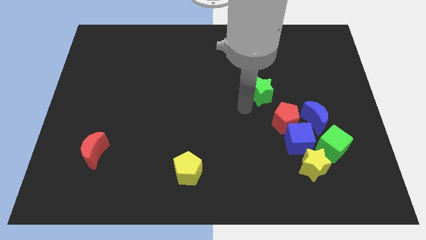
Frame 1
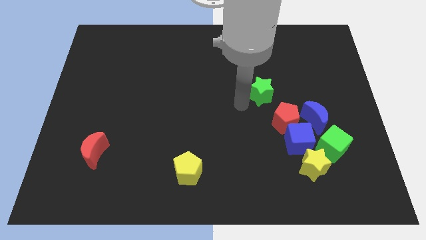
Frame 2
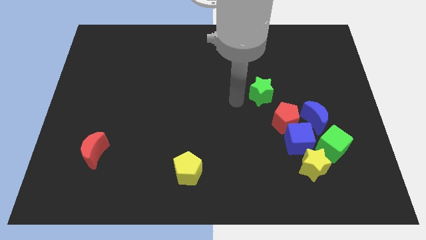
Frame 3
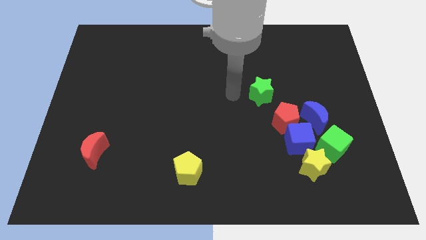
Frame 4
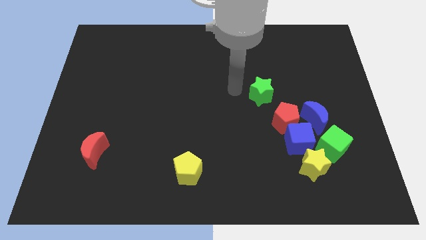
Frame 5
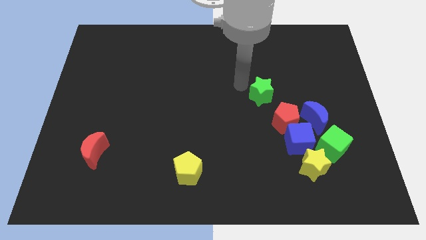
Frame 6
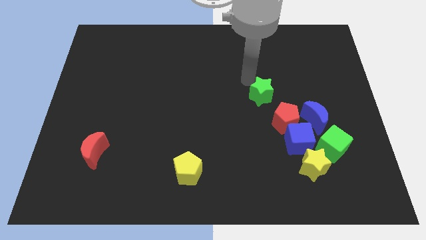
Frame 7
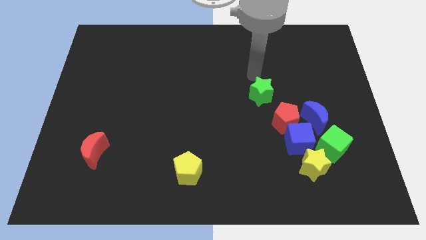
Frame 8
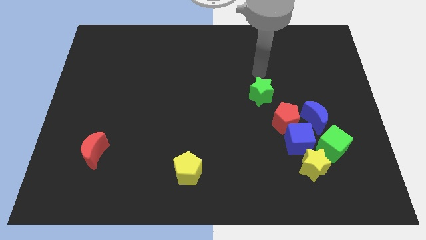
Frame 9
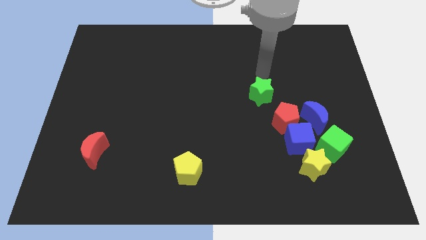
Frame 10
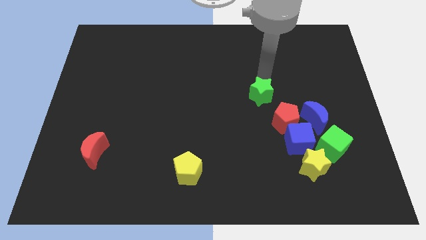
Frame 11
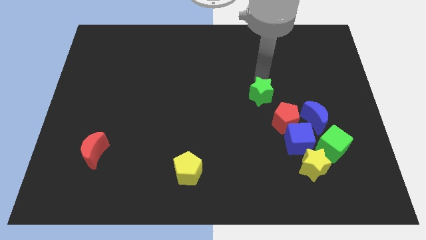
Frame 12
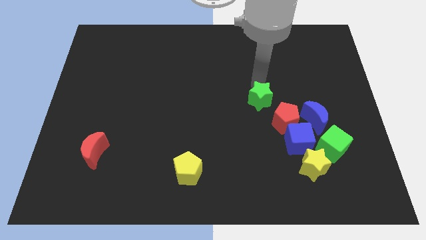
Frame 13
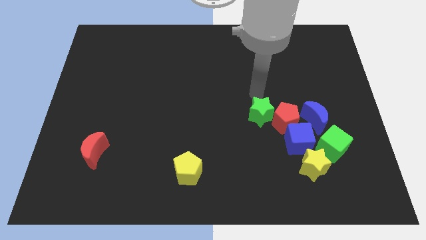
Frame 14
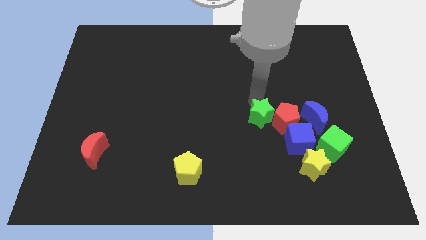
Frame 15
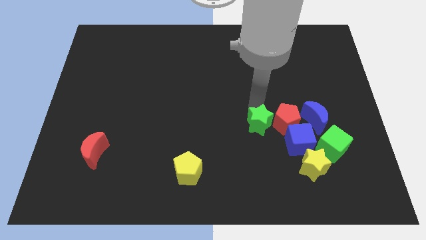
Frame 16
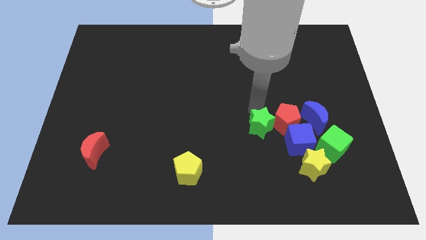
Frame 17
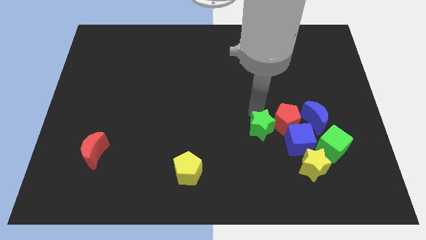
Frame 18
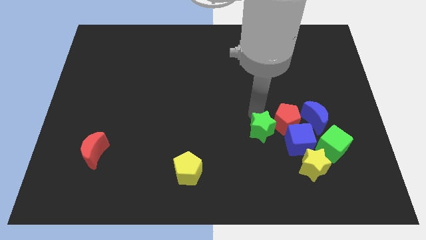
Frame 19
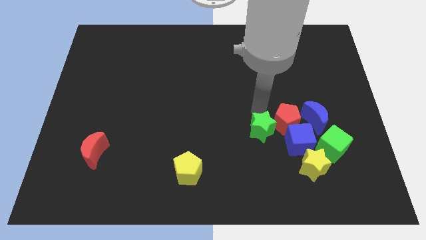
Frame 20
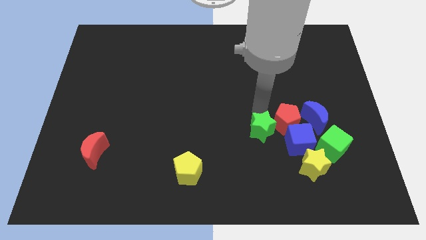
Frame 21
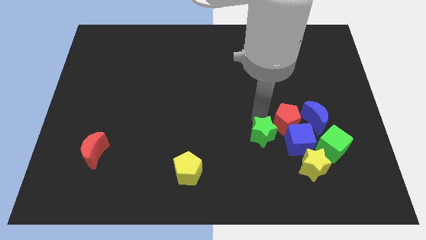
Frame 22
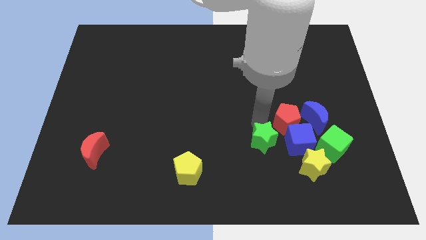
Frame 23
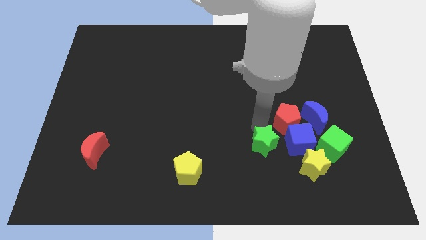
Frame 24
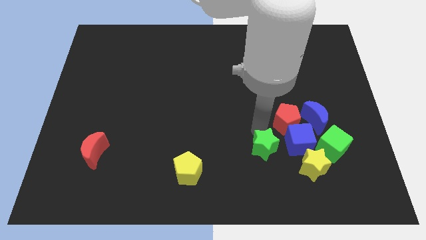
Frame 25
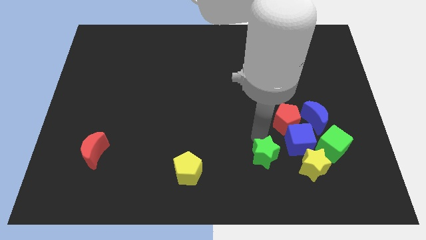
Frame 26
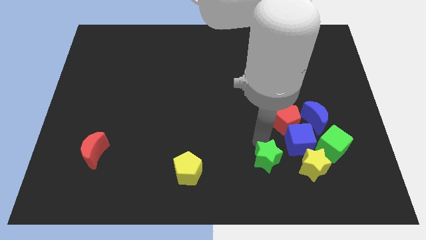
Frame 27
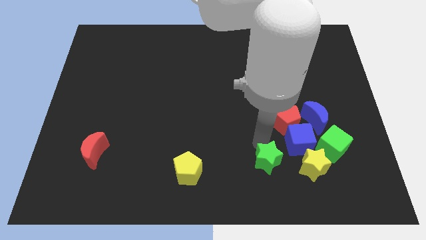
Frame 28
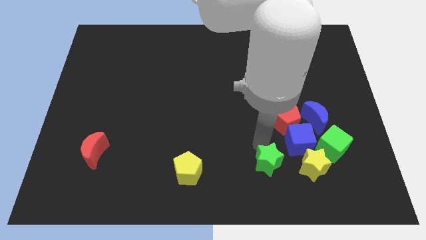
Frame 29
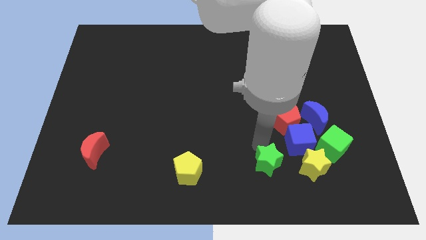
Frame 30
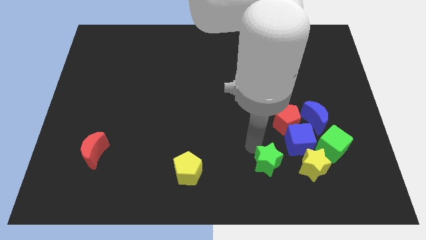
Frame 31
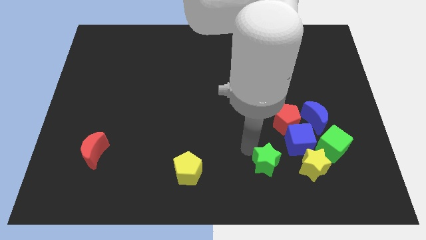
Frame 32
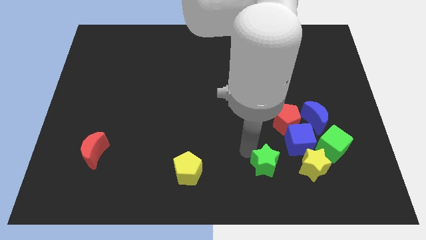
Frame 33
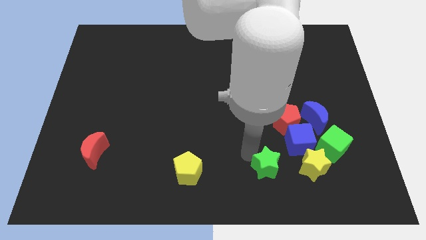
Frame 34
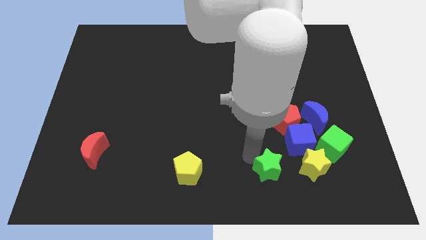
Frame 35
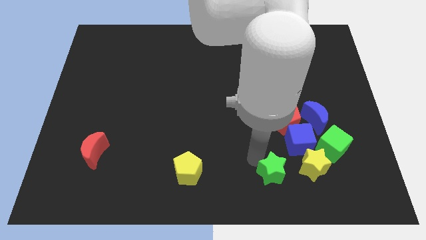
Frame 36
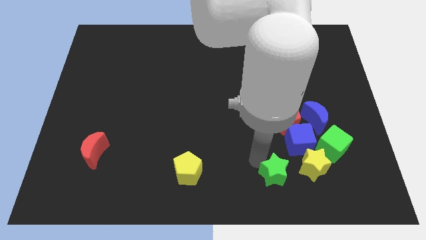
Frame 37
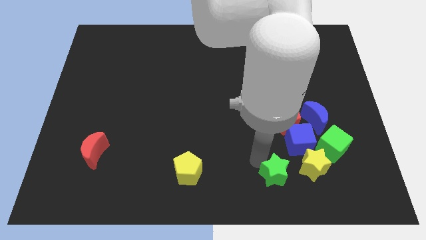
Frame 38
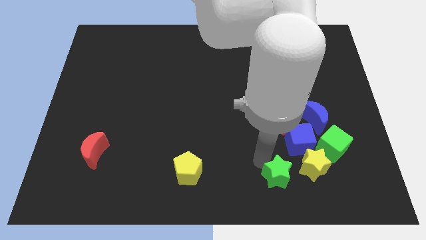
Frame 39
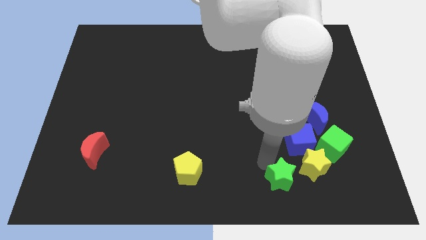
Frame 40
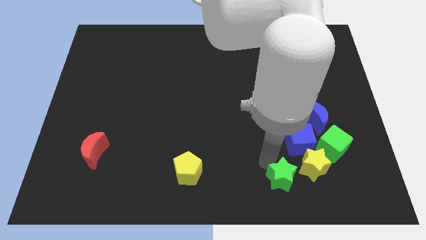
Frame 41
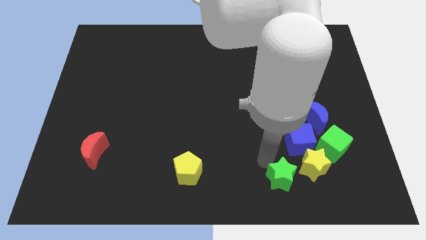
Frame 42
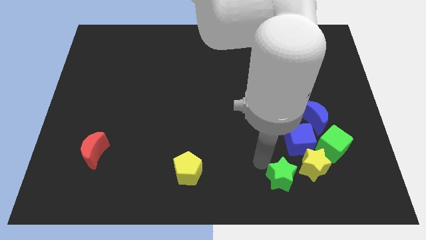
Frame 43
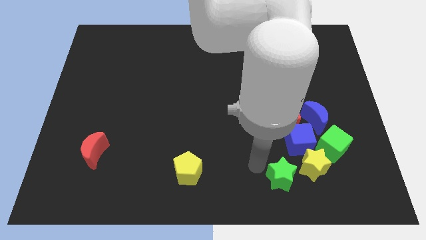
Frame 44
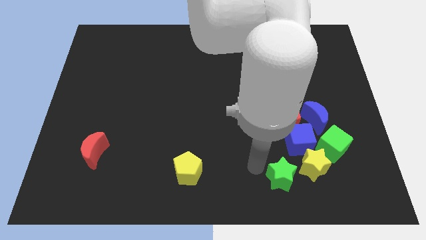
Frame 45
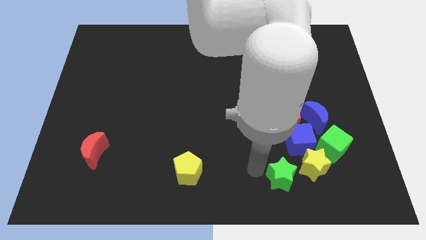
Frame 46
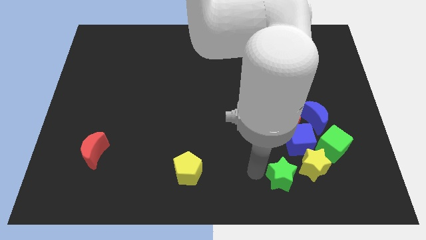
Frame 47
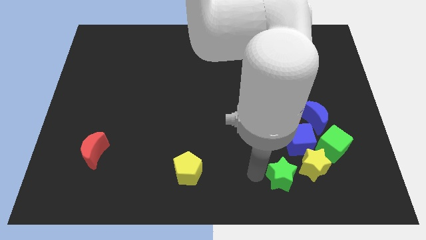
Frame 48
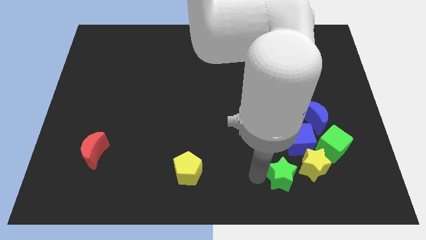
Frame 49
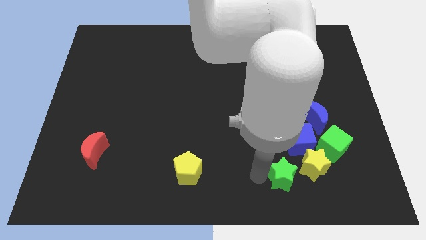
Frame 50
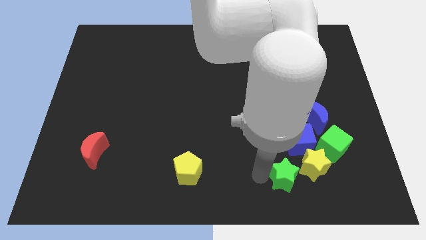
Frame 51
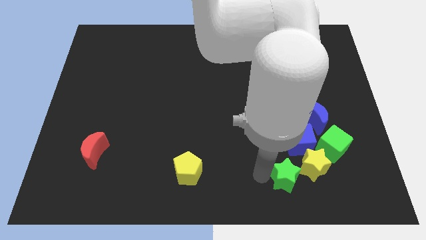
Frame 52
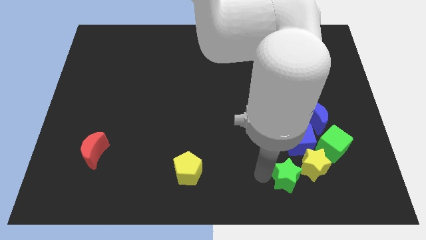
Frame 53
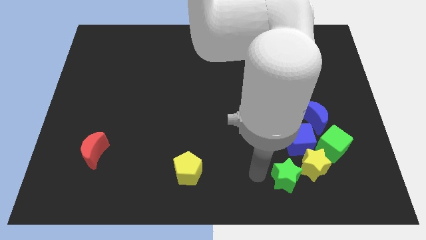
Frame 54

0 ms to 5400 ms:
move green star to the left of the yellow star

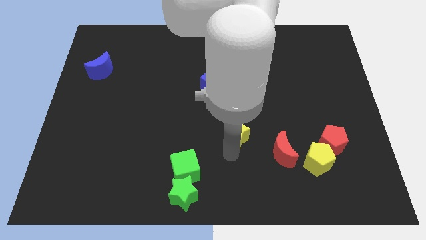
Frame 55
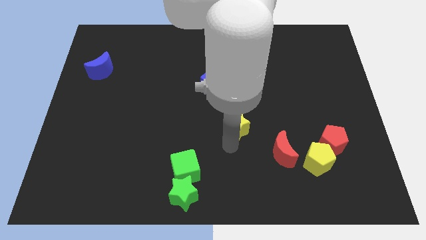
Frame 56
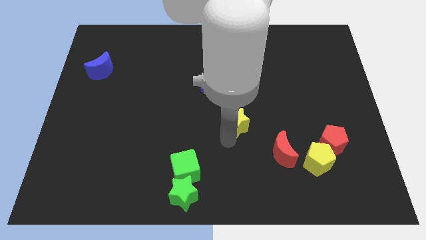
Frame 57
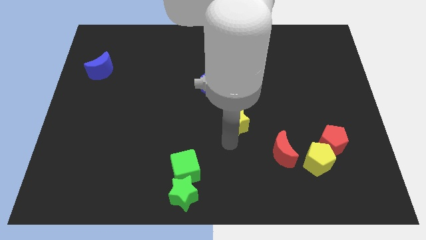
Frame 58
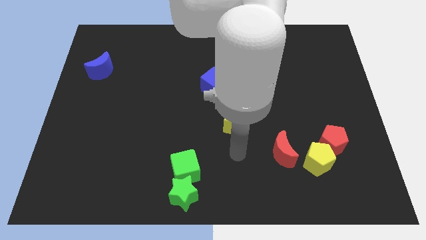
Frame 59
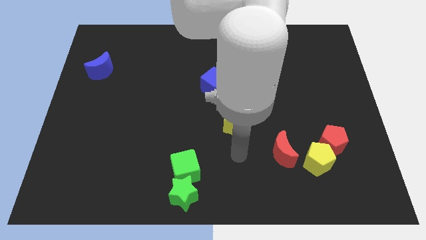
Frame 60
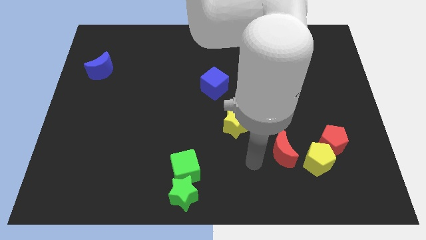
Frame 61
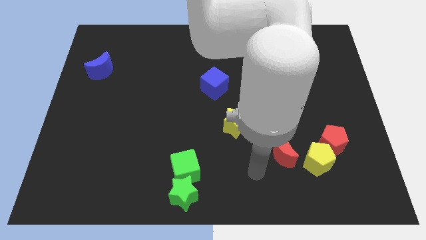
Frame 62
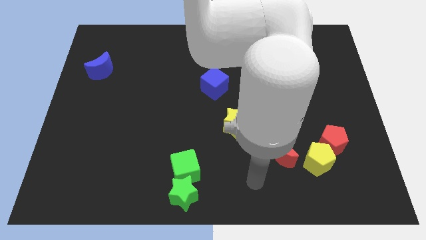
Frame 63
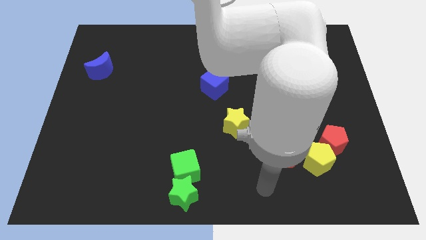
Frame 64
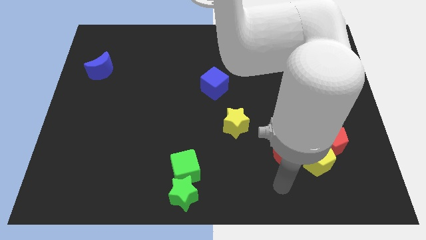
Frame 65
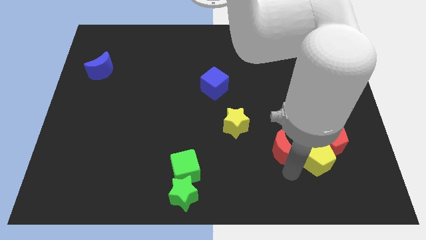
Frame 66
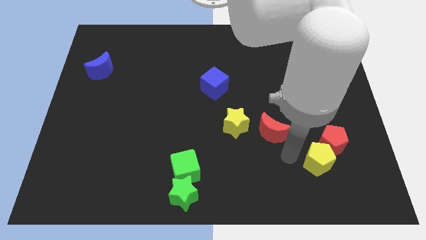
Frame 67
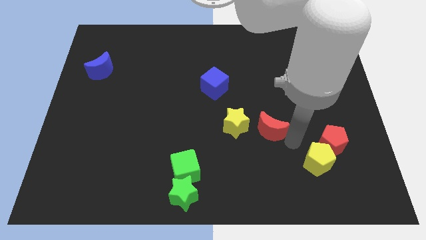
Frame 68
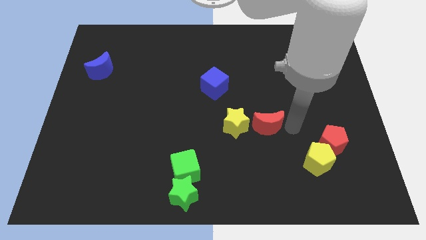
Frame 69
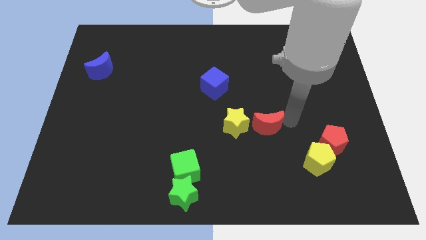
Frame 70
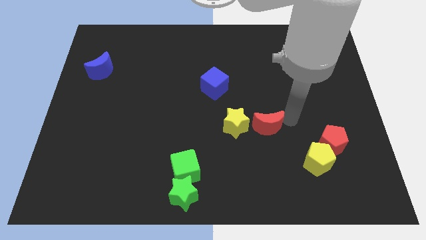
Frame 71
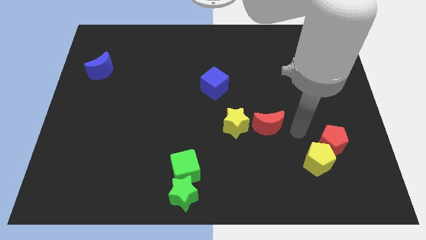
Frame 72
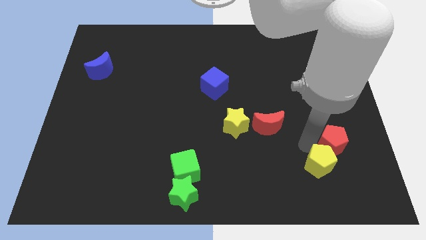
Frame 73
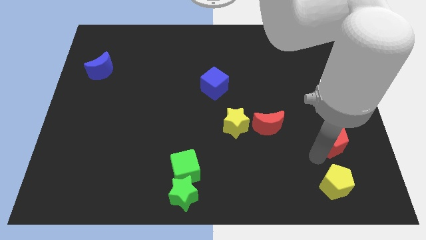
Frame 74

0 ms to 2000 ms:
place the red moon right to the yellow star

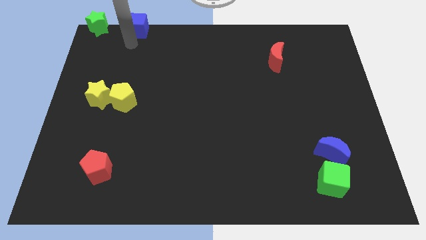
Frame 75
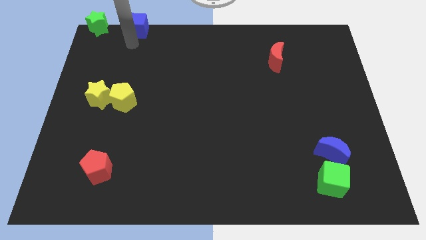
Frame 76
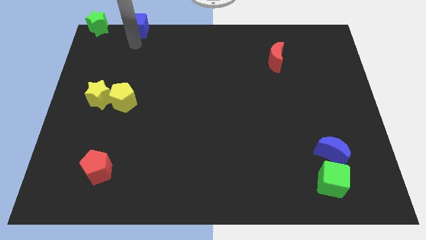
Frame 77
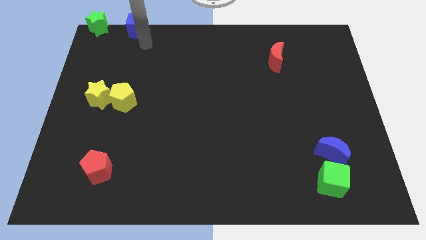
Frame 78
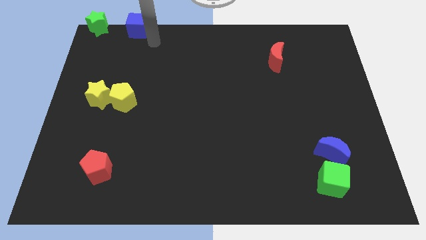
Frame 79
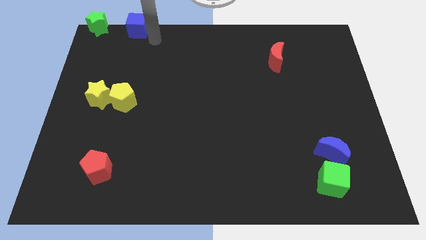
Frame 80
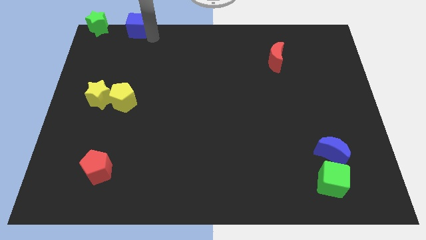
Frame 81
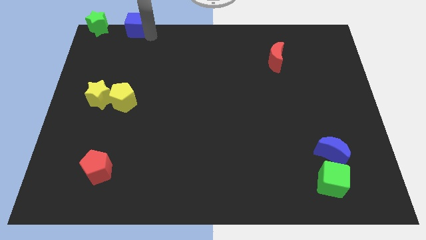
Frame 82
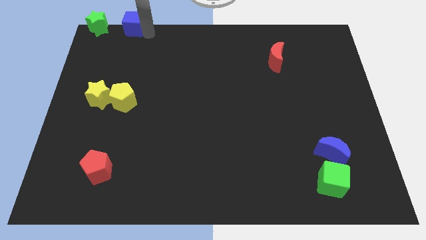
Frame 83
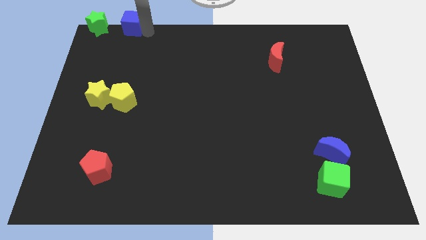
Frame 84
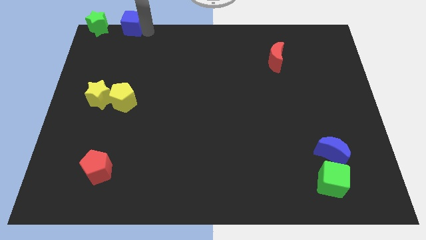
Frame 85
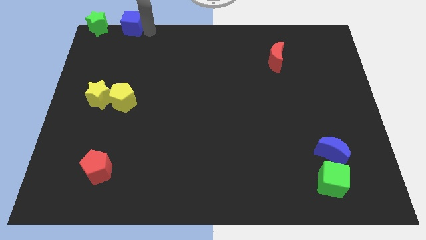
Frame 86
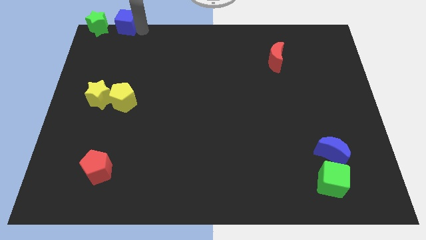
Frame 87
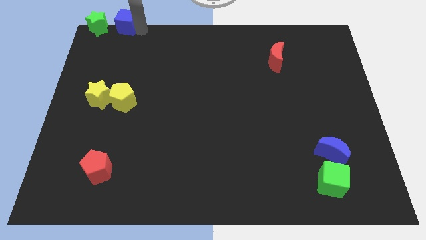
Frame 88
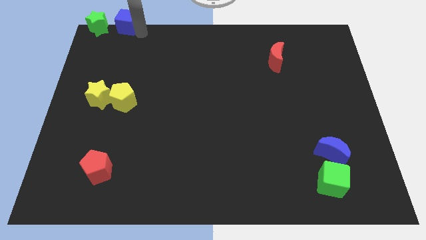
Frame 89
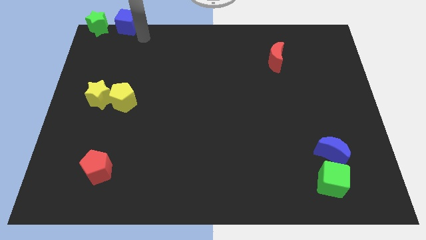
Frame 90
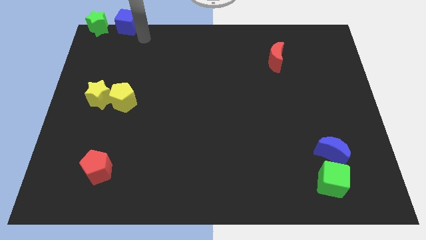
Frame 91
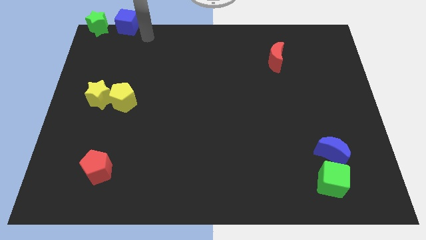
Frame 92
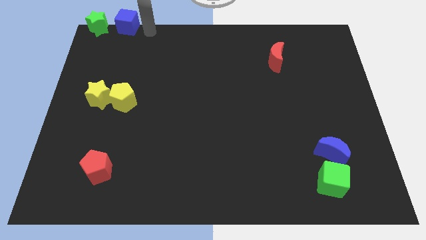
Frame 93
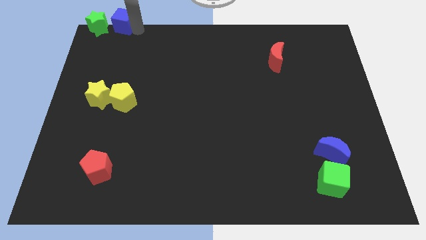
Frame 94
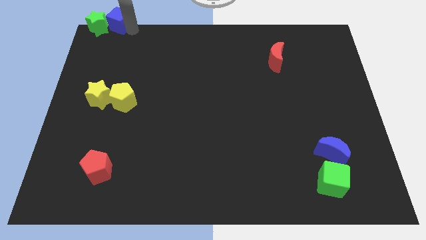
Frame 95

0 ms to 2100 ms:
move the blue cube towards the green star
